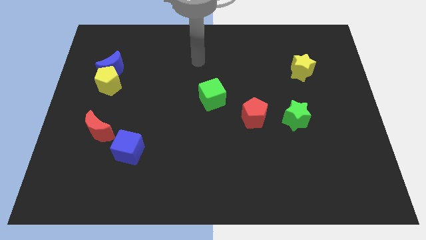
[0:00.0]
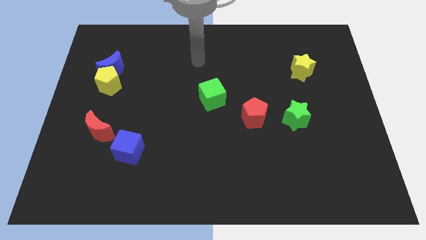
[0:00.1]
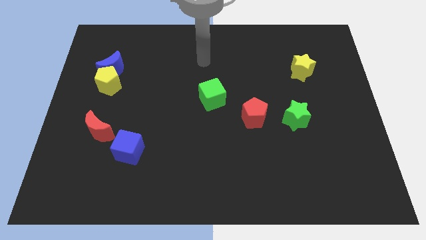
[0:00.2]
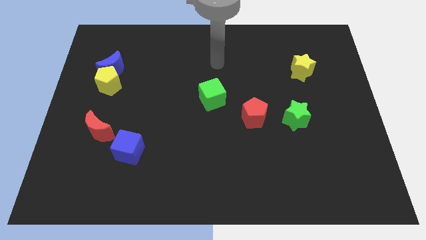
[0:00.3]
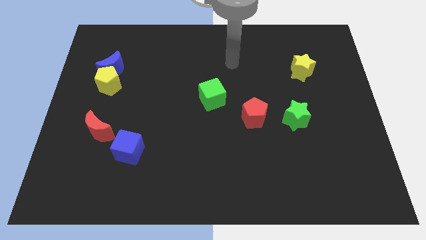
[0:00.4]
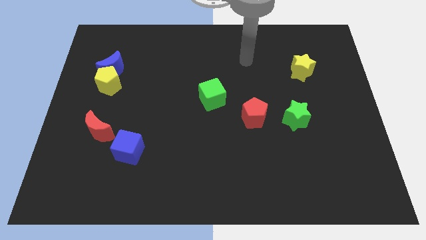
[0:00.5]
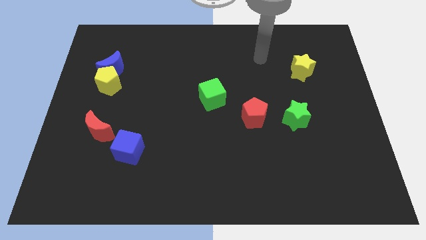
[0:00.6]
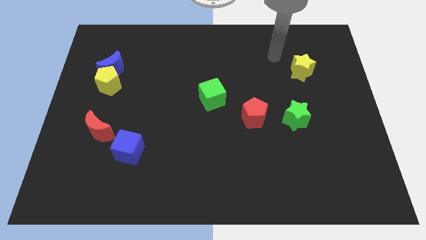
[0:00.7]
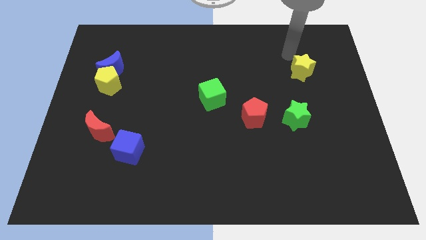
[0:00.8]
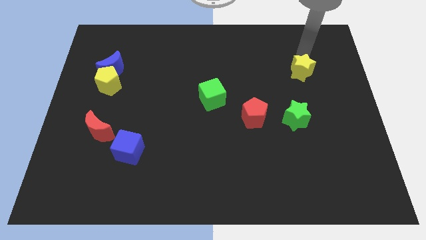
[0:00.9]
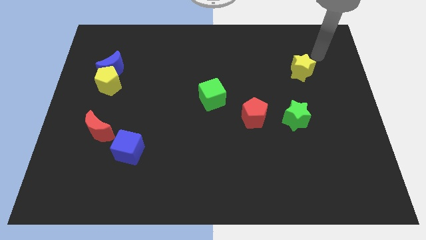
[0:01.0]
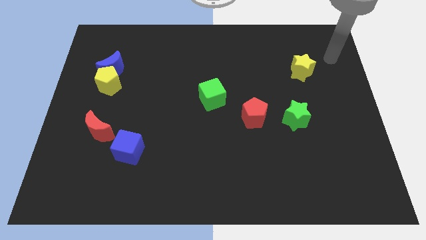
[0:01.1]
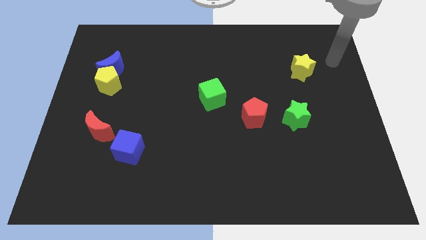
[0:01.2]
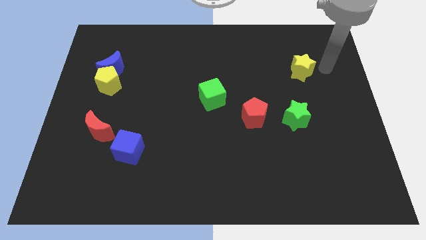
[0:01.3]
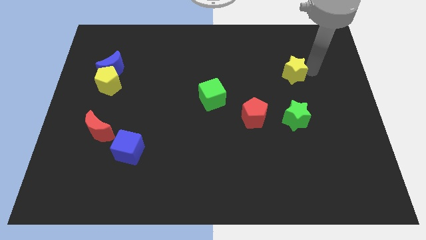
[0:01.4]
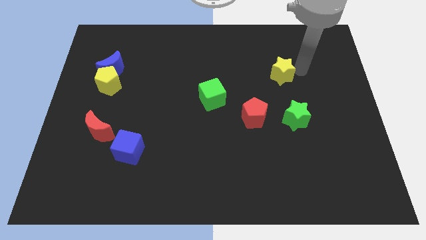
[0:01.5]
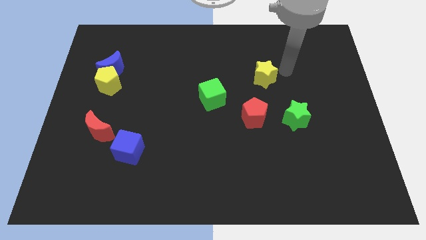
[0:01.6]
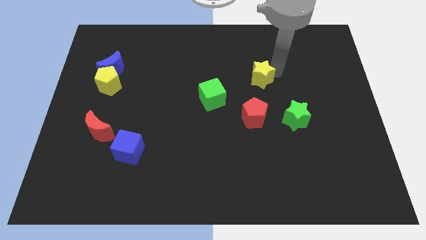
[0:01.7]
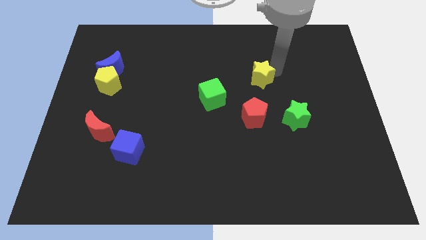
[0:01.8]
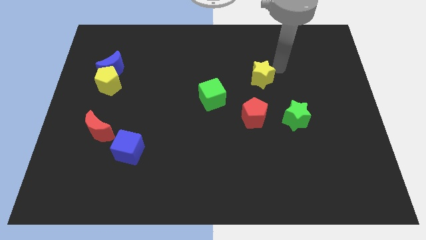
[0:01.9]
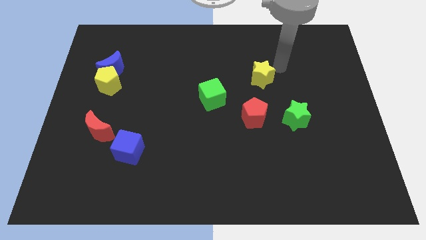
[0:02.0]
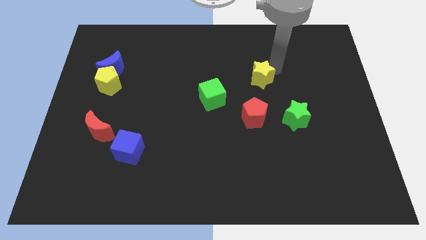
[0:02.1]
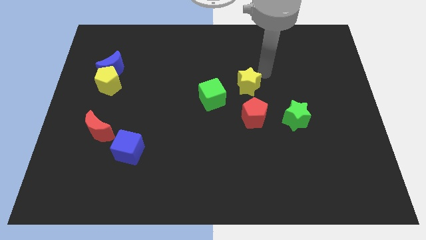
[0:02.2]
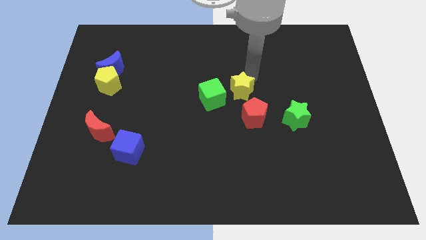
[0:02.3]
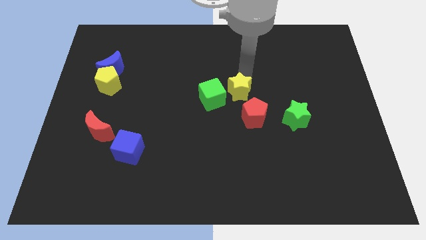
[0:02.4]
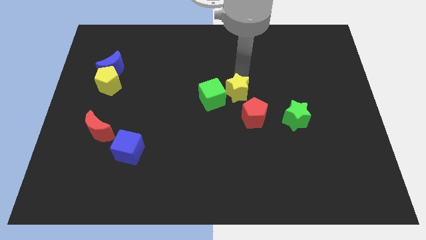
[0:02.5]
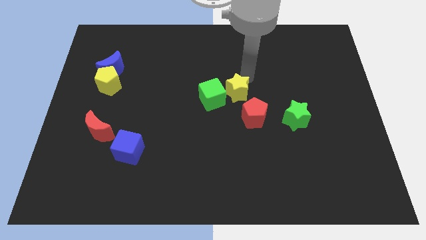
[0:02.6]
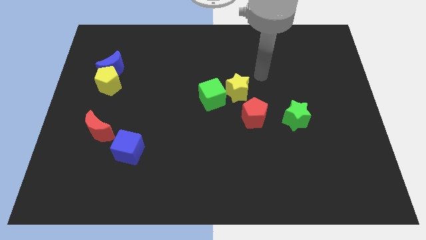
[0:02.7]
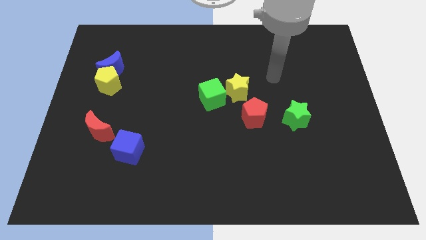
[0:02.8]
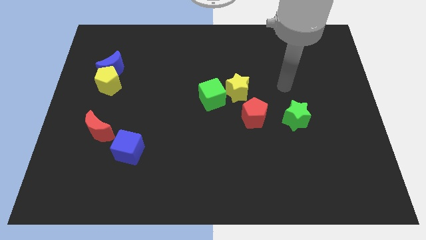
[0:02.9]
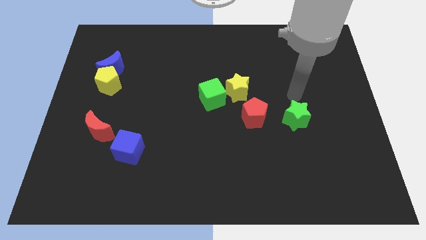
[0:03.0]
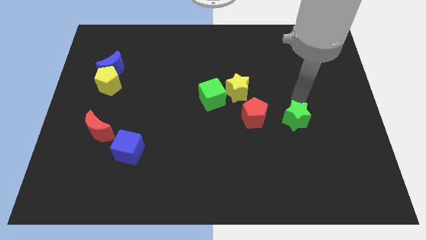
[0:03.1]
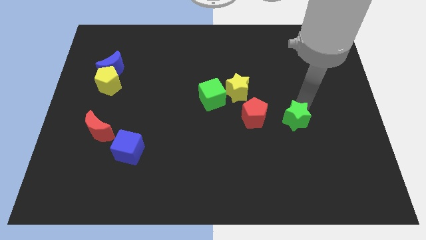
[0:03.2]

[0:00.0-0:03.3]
push the yellow star close to the green cube

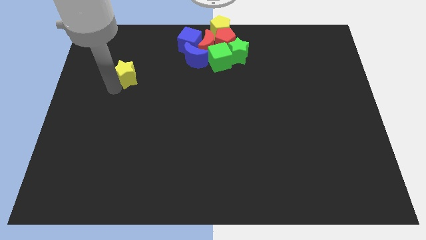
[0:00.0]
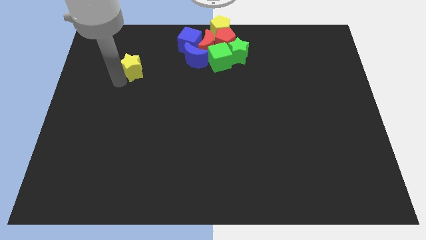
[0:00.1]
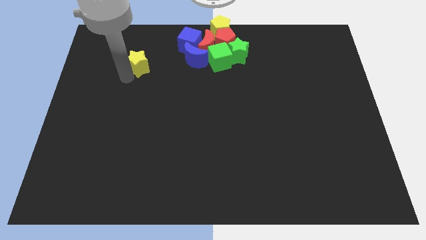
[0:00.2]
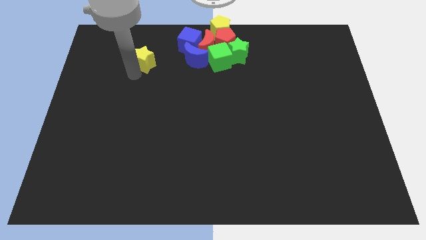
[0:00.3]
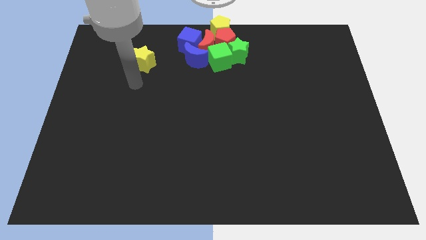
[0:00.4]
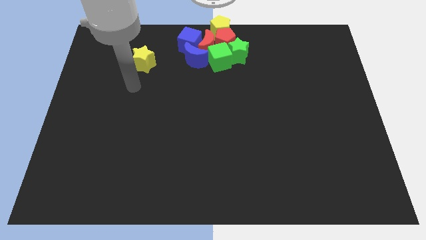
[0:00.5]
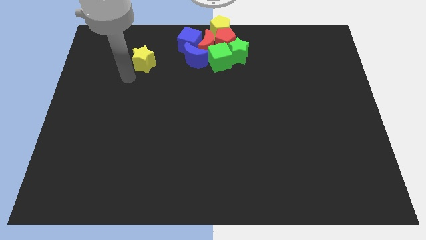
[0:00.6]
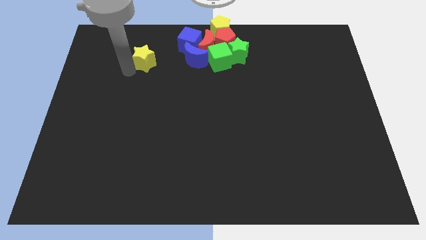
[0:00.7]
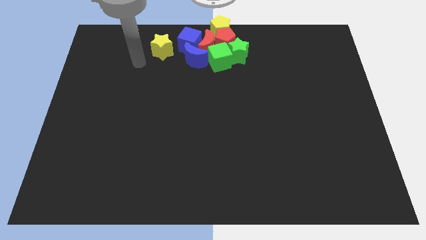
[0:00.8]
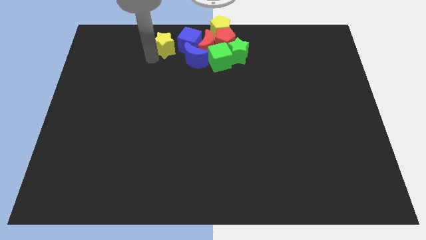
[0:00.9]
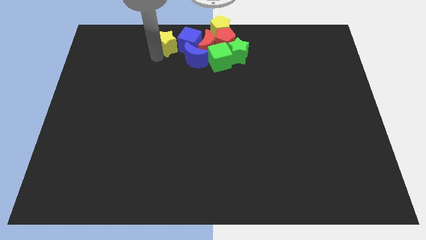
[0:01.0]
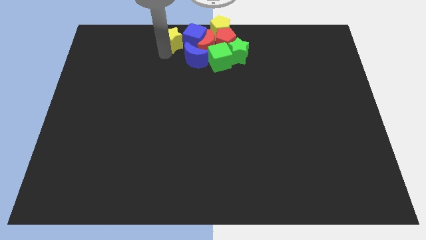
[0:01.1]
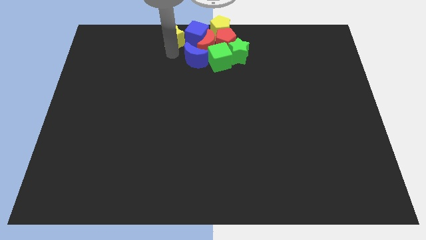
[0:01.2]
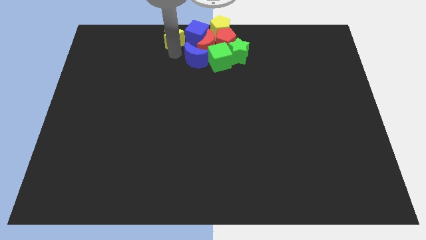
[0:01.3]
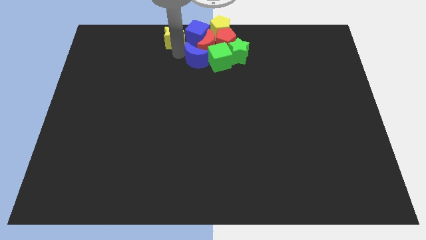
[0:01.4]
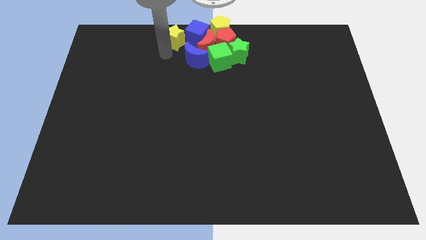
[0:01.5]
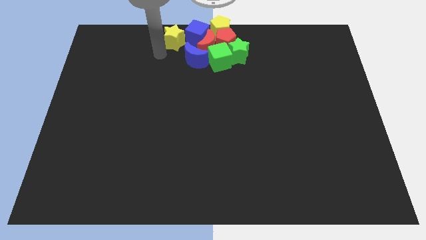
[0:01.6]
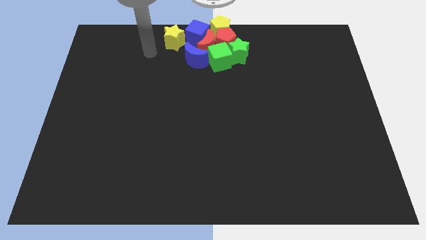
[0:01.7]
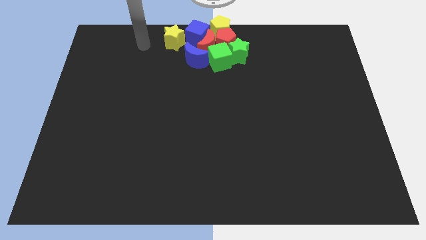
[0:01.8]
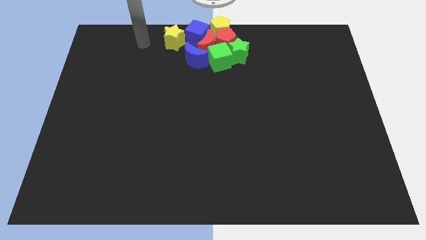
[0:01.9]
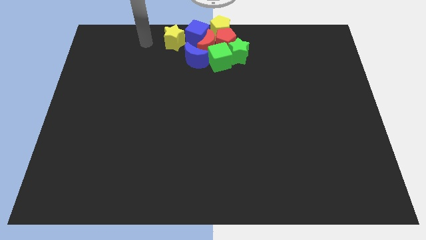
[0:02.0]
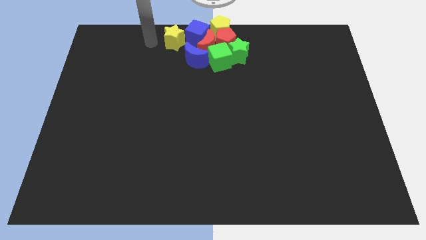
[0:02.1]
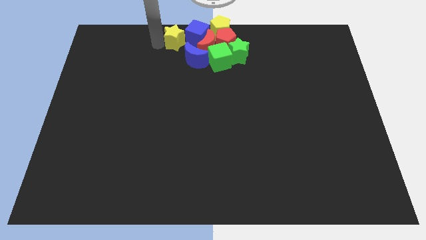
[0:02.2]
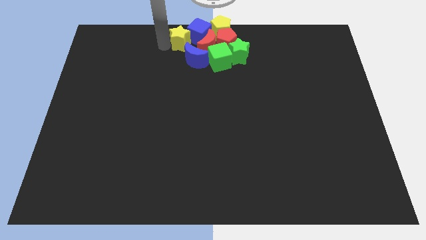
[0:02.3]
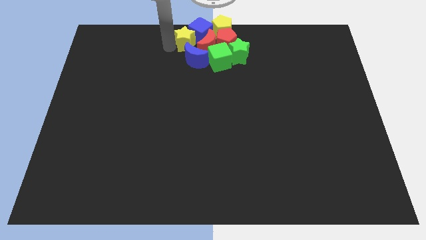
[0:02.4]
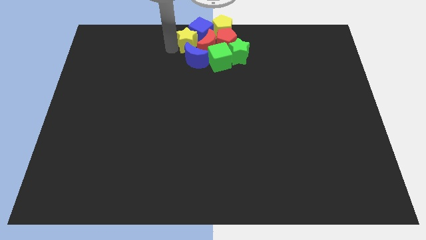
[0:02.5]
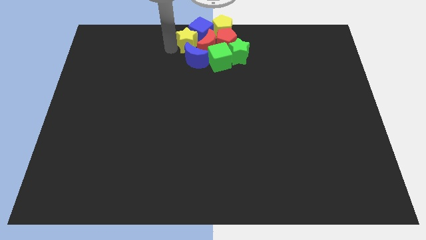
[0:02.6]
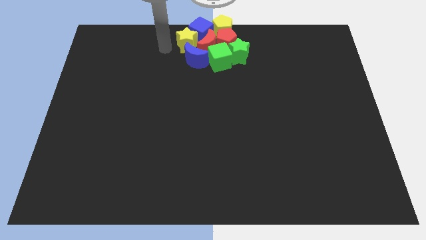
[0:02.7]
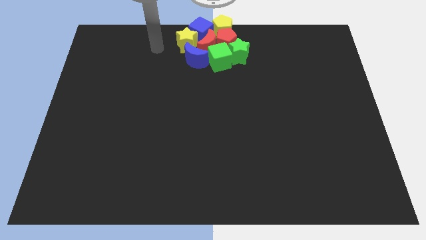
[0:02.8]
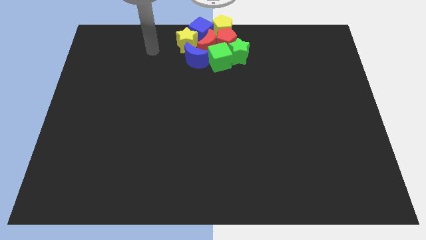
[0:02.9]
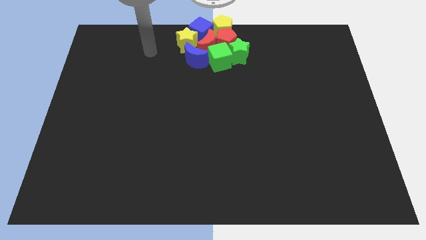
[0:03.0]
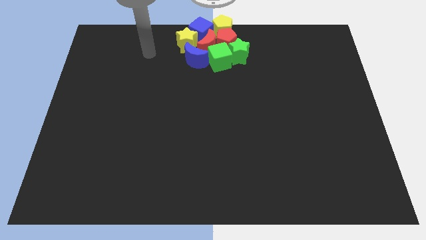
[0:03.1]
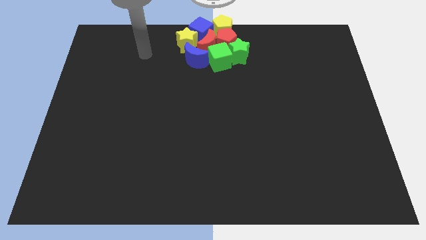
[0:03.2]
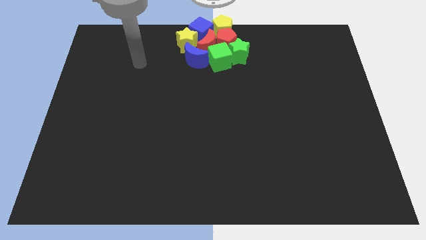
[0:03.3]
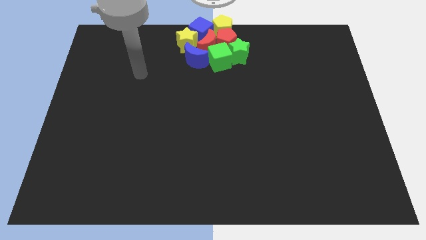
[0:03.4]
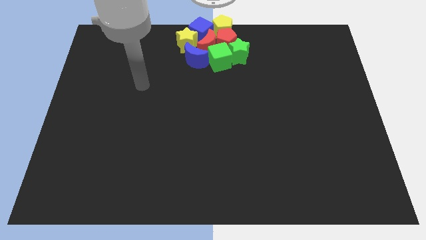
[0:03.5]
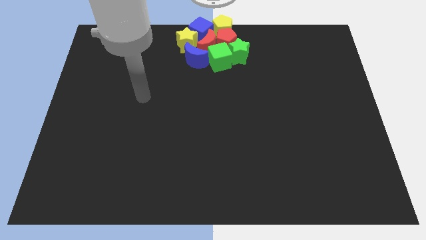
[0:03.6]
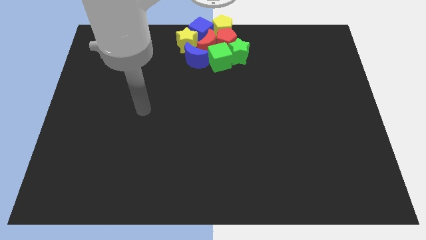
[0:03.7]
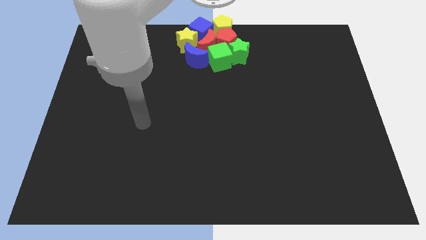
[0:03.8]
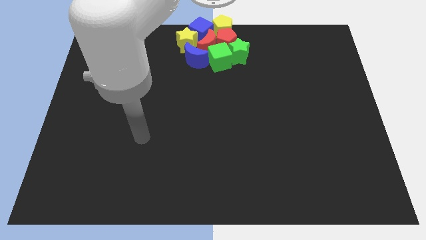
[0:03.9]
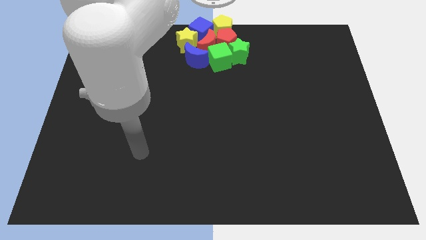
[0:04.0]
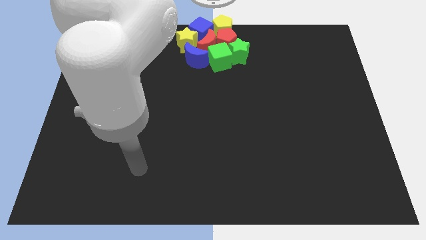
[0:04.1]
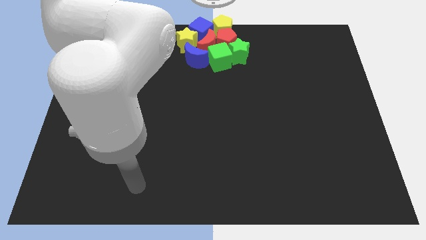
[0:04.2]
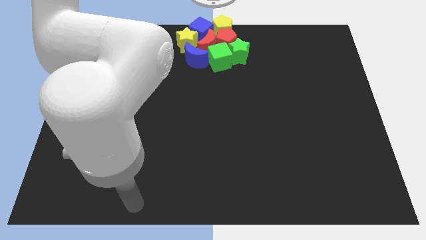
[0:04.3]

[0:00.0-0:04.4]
push the yellow star into the blue cube

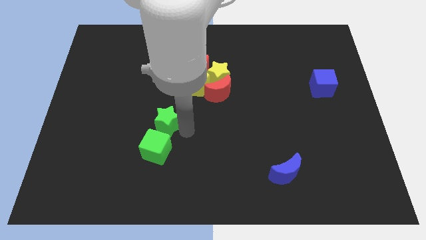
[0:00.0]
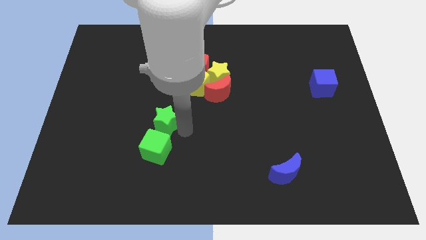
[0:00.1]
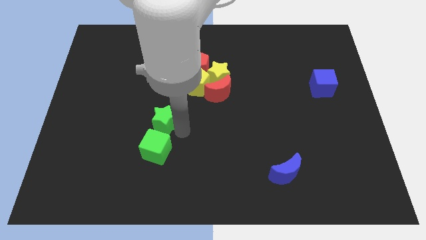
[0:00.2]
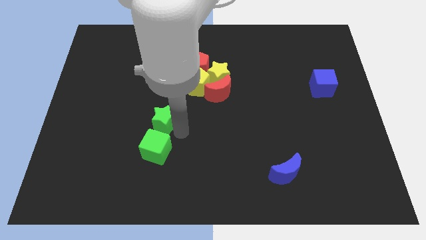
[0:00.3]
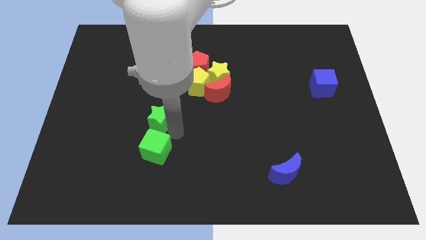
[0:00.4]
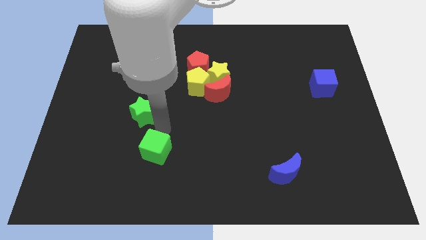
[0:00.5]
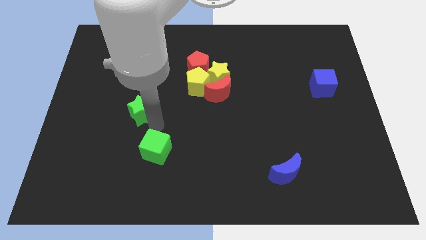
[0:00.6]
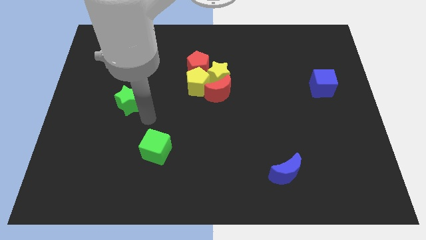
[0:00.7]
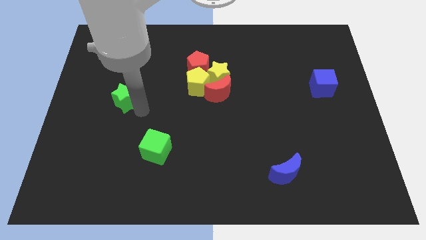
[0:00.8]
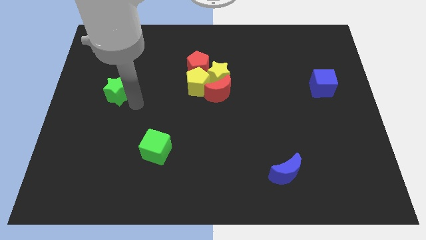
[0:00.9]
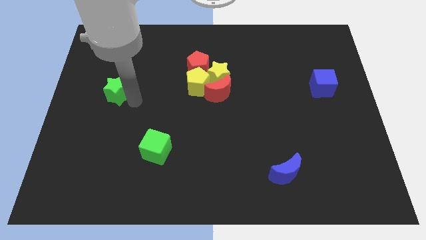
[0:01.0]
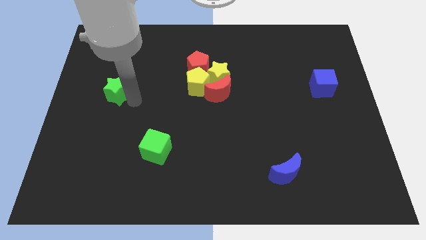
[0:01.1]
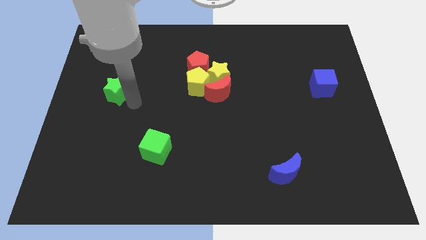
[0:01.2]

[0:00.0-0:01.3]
separate the green blocks
